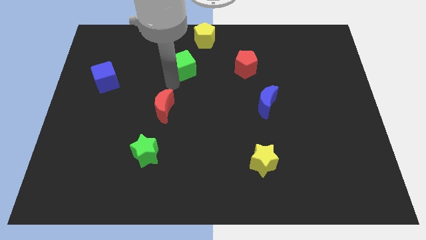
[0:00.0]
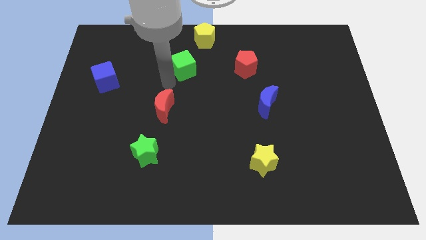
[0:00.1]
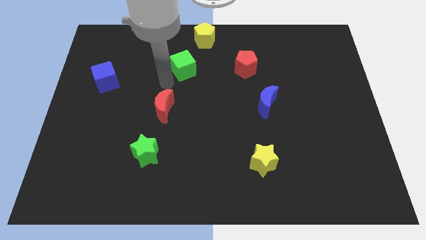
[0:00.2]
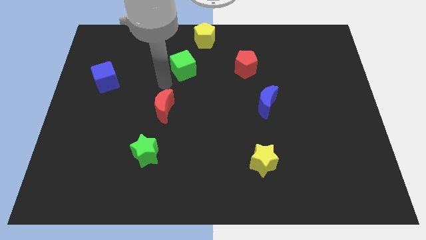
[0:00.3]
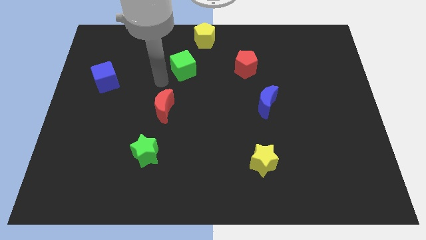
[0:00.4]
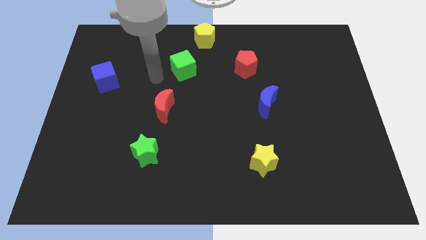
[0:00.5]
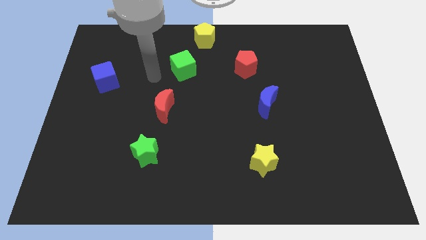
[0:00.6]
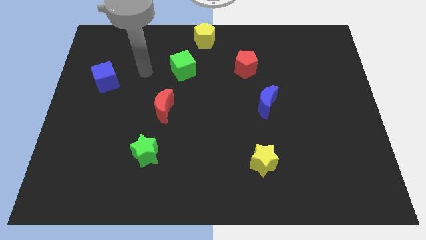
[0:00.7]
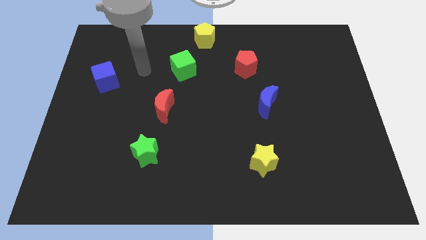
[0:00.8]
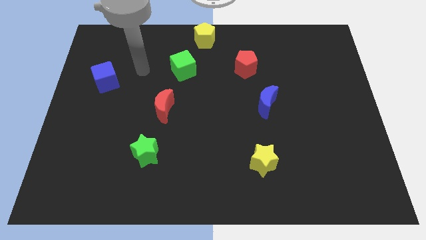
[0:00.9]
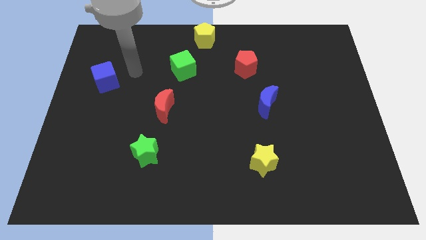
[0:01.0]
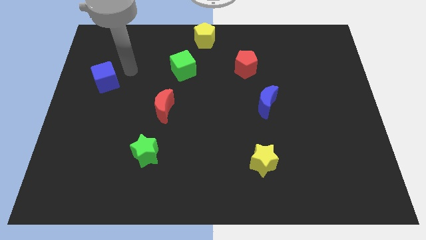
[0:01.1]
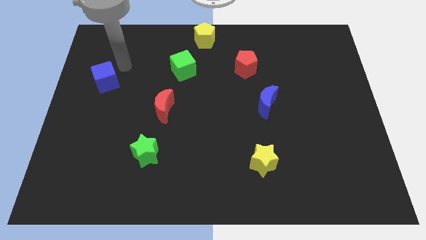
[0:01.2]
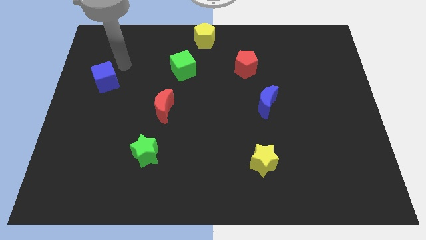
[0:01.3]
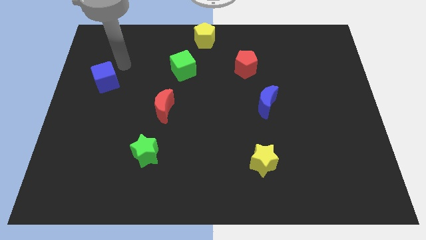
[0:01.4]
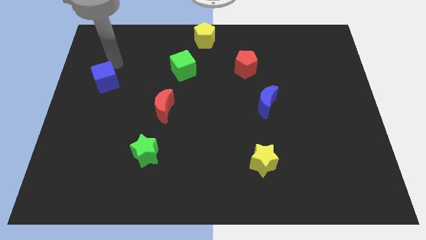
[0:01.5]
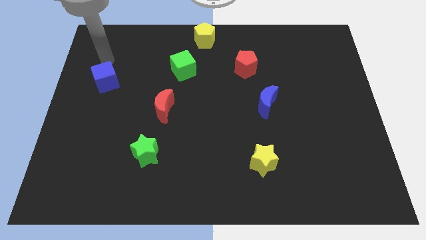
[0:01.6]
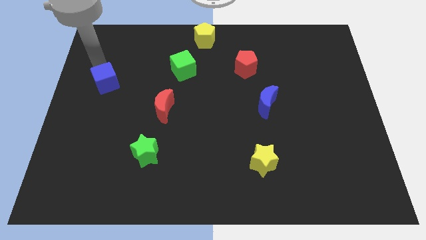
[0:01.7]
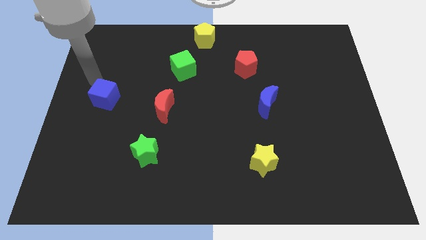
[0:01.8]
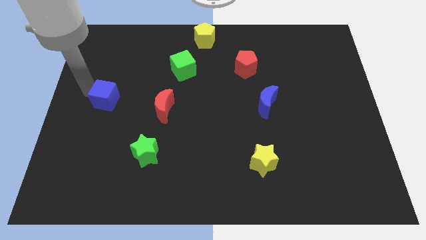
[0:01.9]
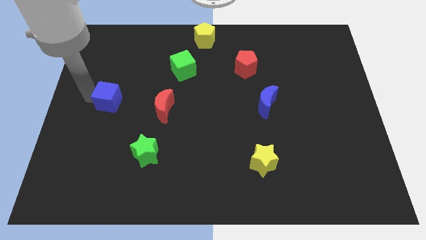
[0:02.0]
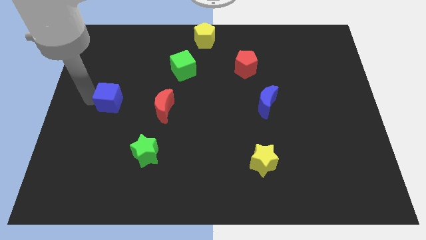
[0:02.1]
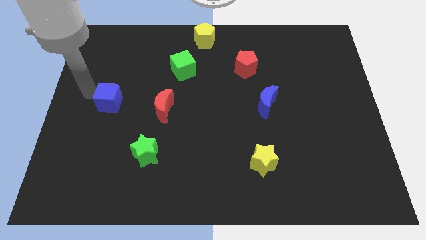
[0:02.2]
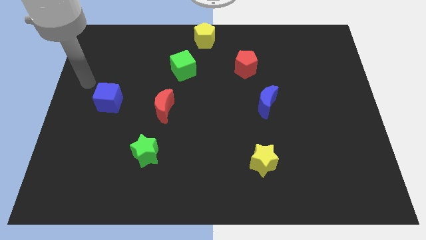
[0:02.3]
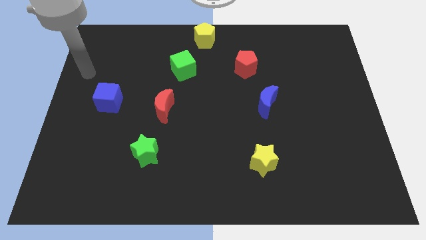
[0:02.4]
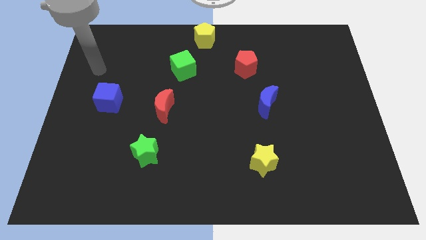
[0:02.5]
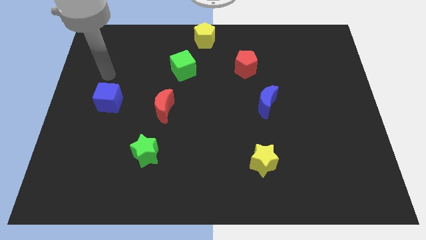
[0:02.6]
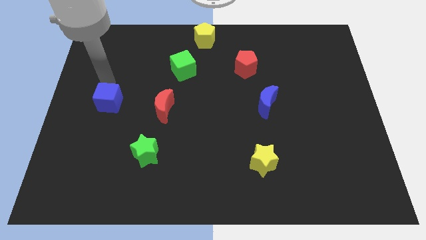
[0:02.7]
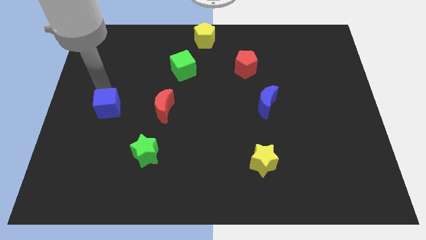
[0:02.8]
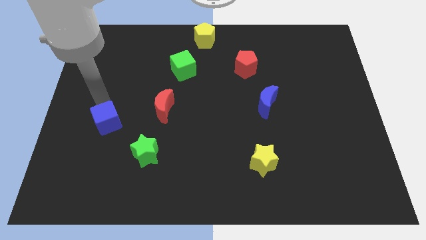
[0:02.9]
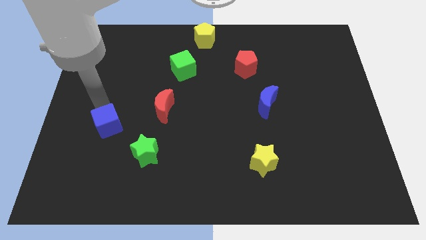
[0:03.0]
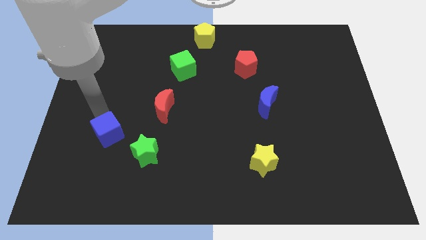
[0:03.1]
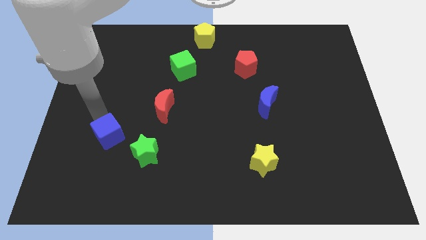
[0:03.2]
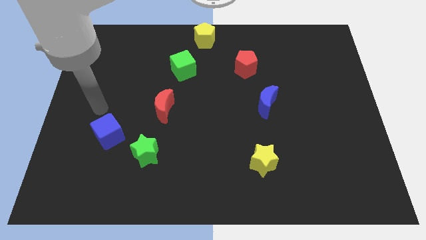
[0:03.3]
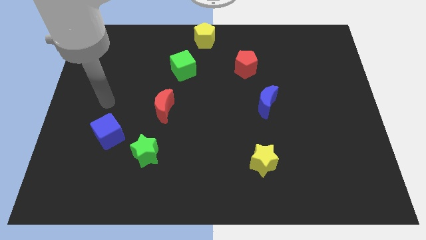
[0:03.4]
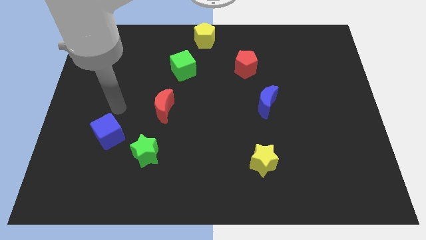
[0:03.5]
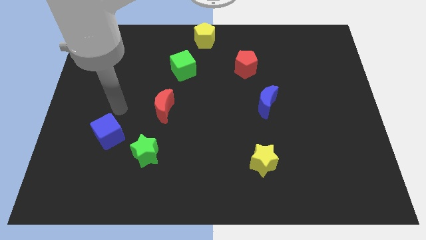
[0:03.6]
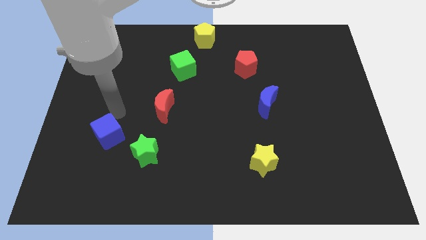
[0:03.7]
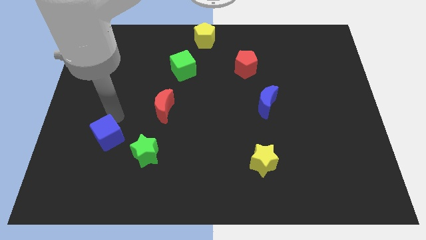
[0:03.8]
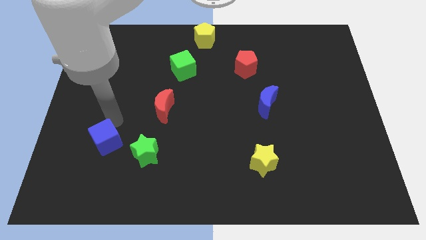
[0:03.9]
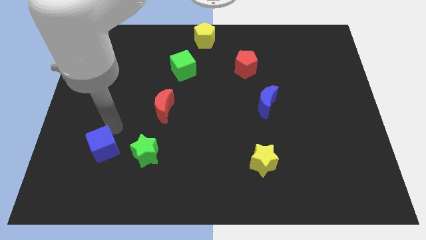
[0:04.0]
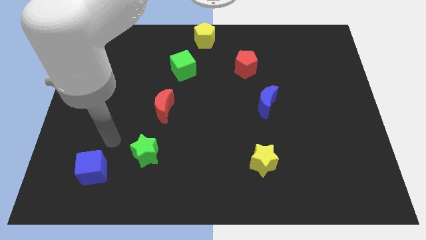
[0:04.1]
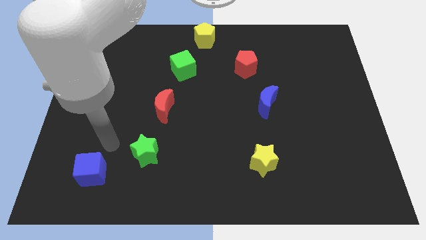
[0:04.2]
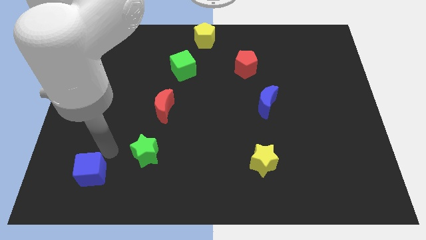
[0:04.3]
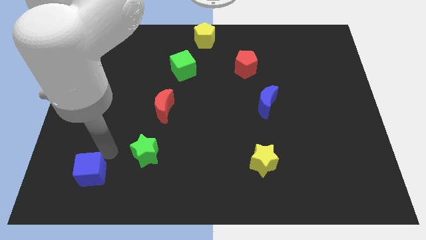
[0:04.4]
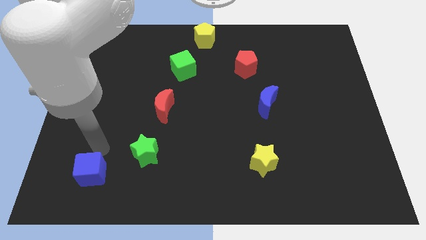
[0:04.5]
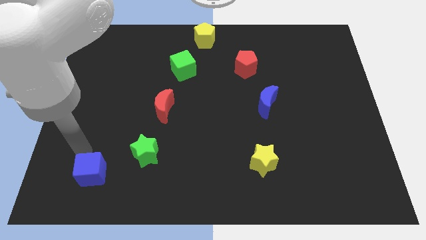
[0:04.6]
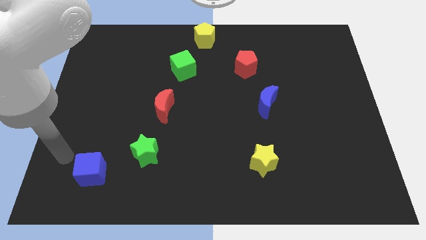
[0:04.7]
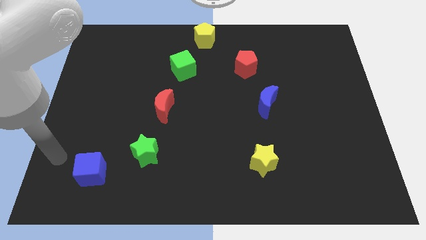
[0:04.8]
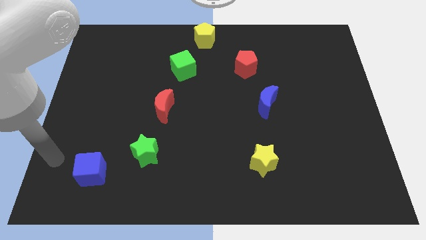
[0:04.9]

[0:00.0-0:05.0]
move the blue cube to the bottom

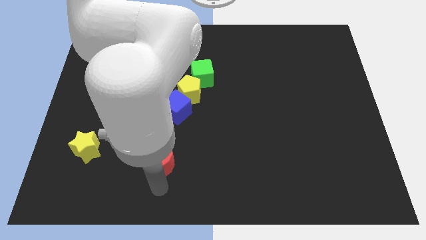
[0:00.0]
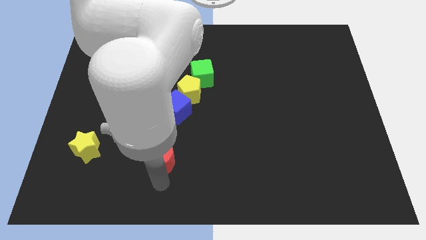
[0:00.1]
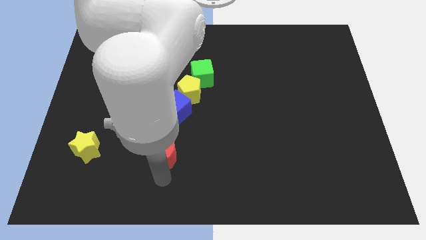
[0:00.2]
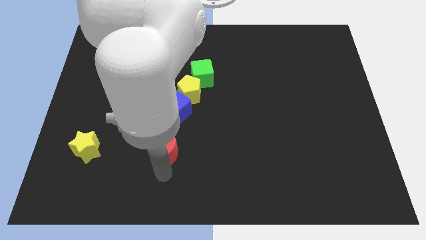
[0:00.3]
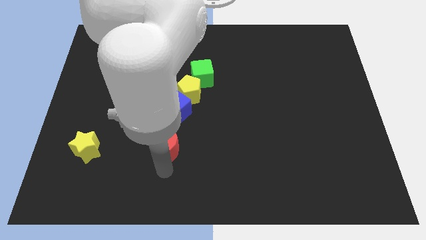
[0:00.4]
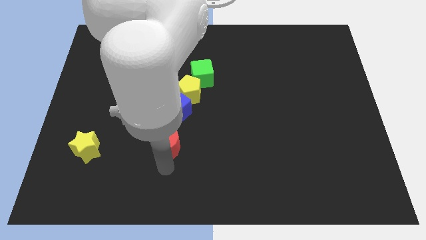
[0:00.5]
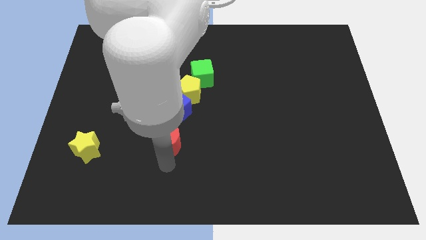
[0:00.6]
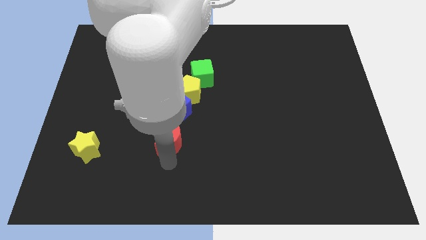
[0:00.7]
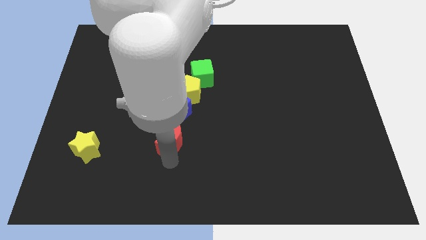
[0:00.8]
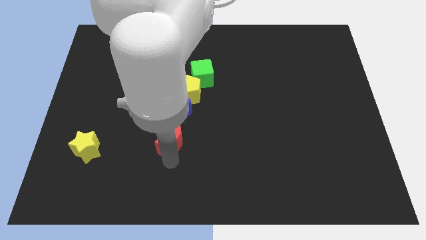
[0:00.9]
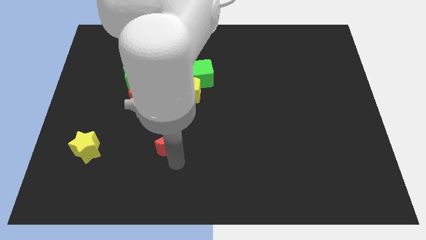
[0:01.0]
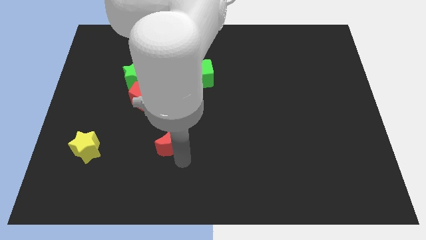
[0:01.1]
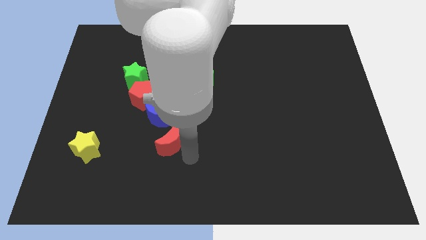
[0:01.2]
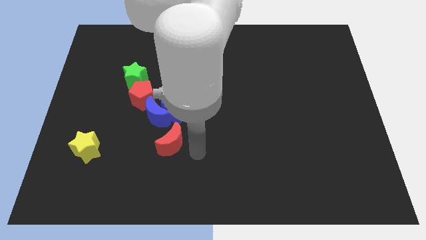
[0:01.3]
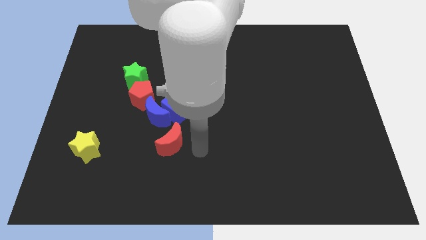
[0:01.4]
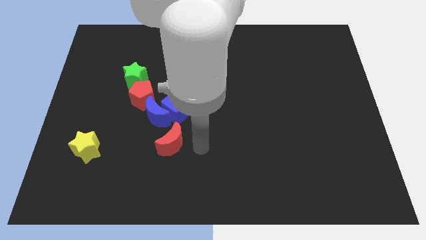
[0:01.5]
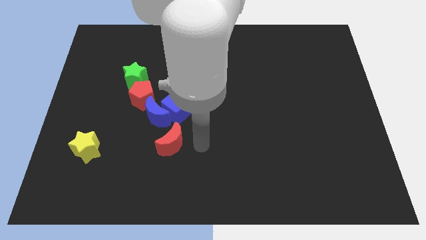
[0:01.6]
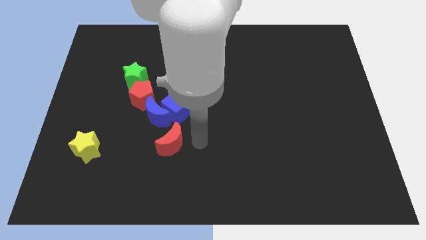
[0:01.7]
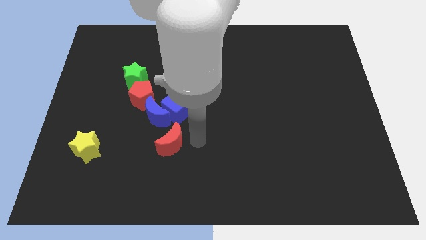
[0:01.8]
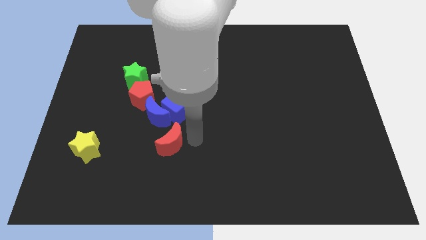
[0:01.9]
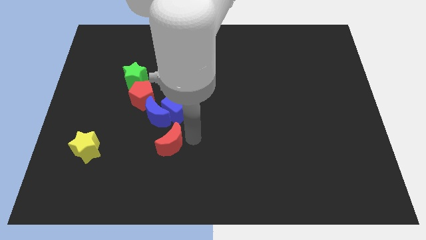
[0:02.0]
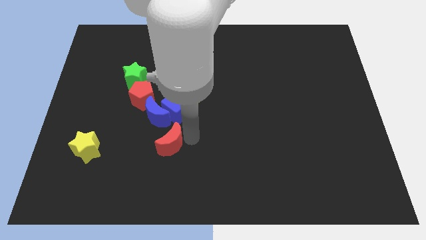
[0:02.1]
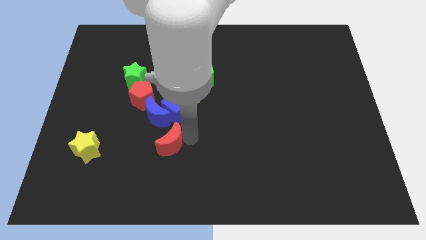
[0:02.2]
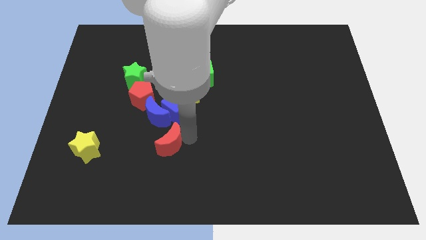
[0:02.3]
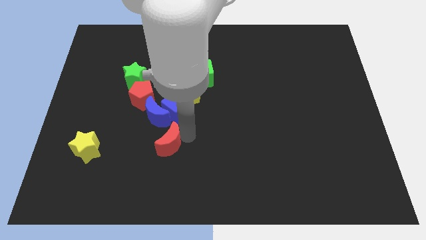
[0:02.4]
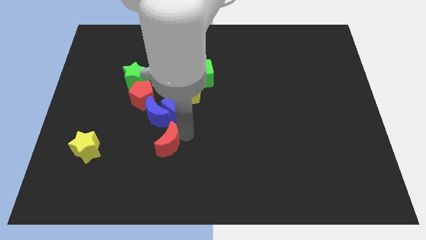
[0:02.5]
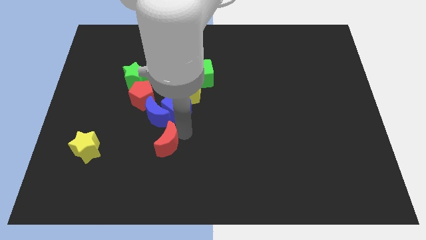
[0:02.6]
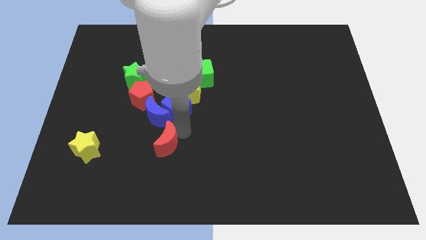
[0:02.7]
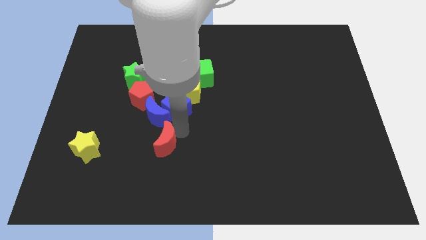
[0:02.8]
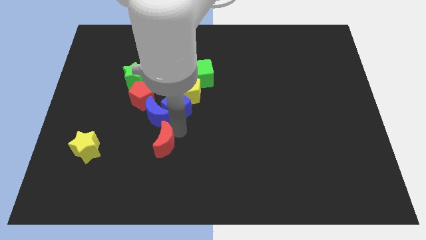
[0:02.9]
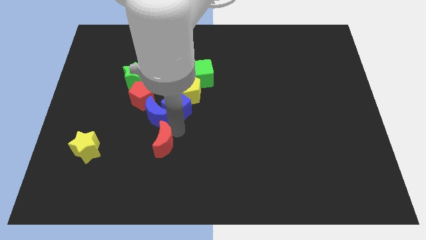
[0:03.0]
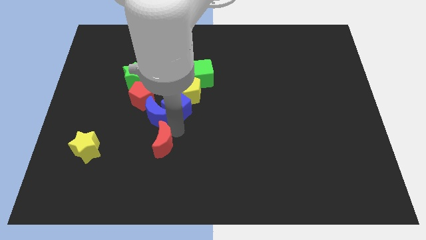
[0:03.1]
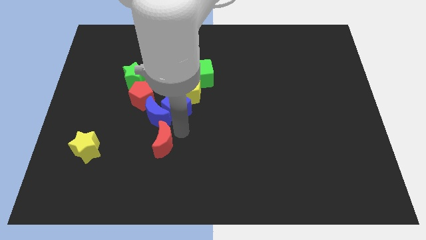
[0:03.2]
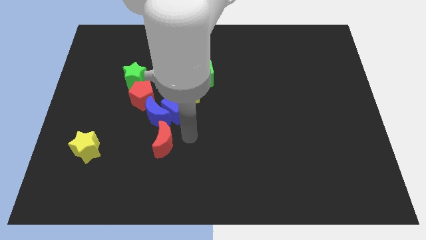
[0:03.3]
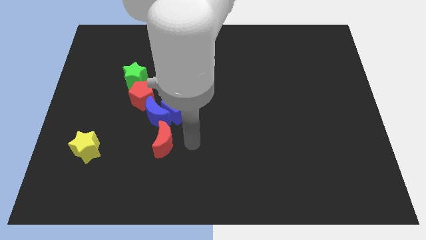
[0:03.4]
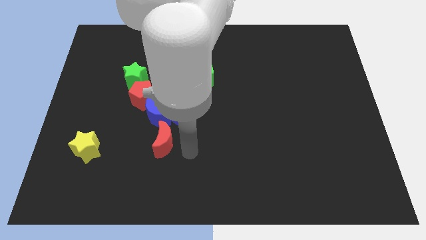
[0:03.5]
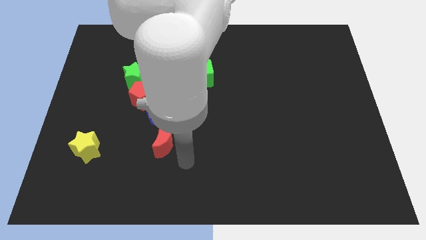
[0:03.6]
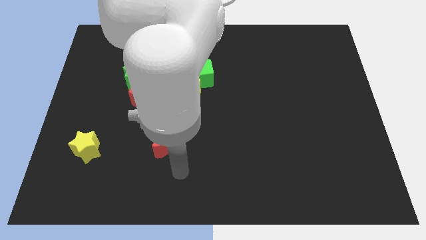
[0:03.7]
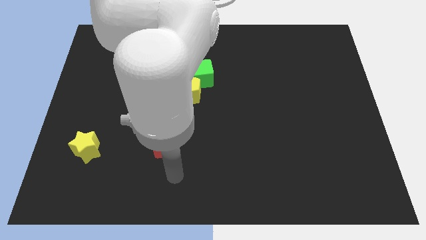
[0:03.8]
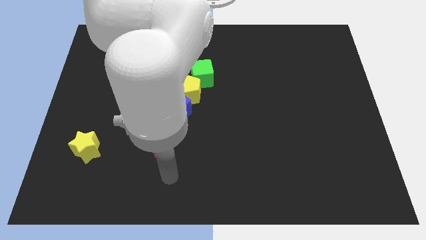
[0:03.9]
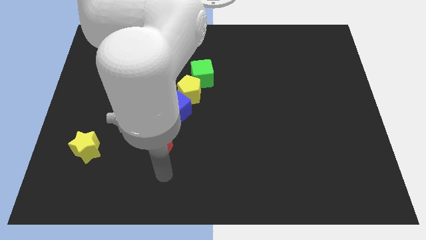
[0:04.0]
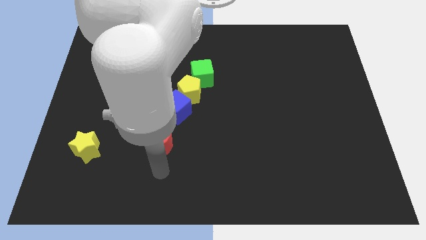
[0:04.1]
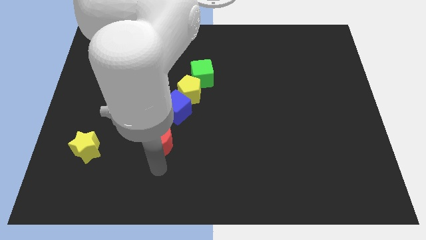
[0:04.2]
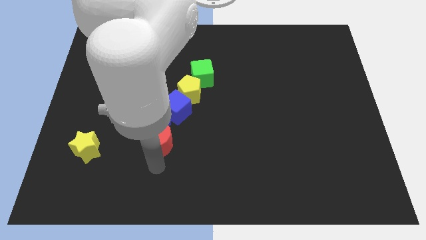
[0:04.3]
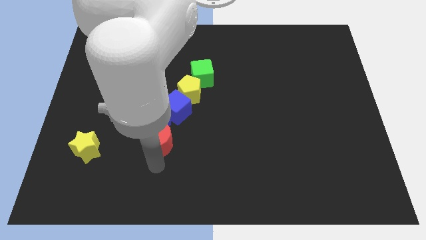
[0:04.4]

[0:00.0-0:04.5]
adjust the red crescent below the blue blocks
